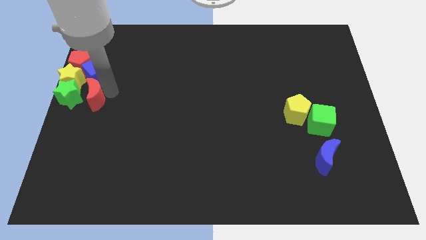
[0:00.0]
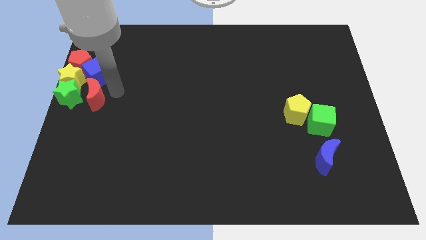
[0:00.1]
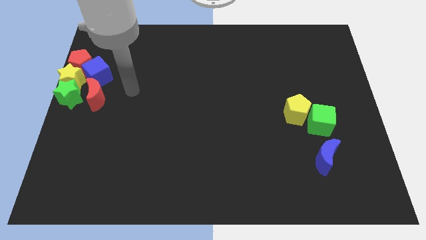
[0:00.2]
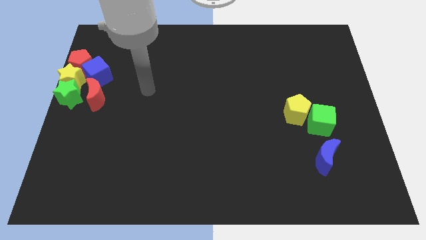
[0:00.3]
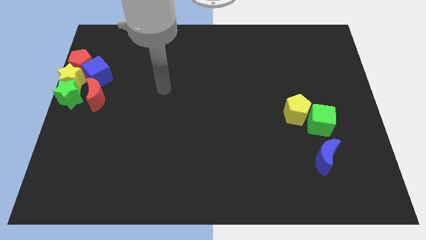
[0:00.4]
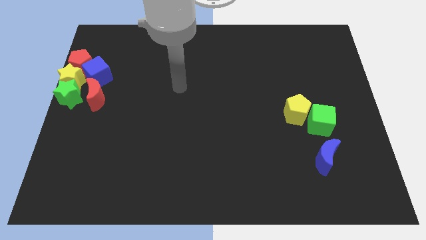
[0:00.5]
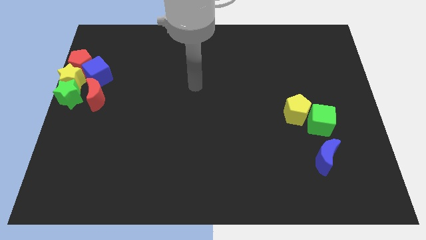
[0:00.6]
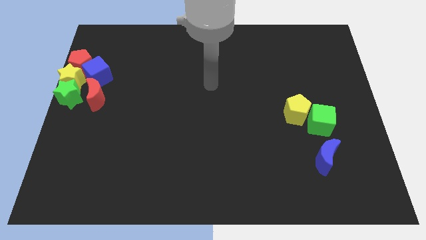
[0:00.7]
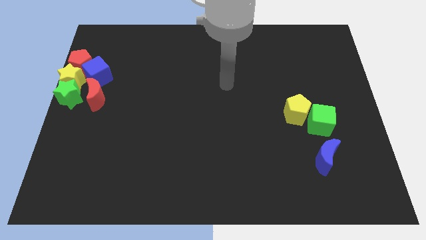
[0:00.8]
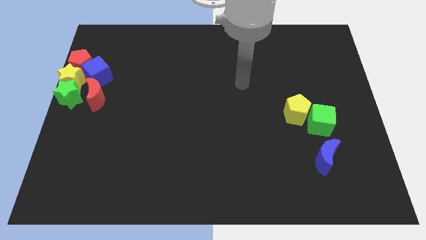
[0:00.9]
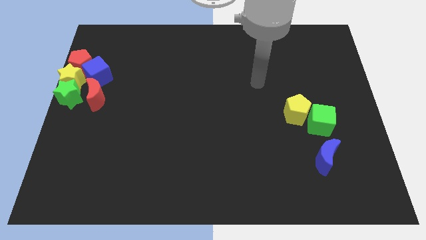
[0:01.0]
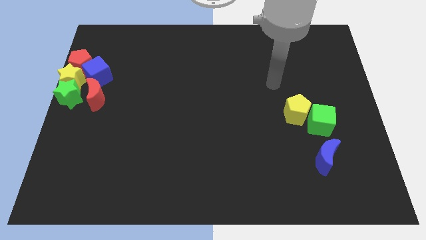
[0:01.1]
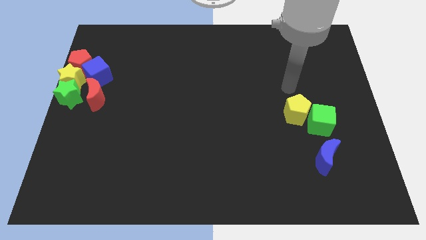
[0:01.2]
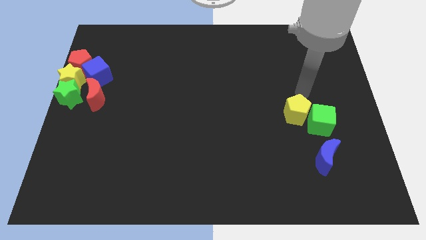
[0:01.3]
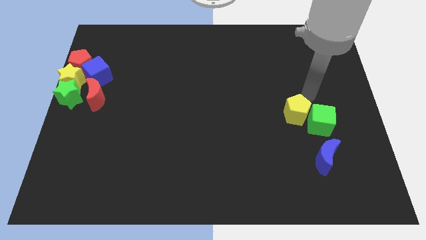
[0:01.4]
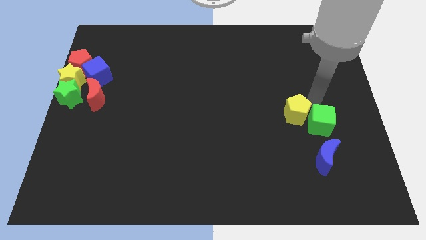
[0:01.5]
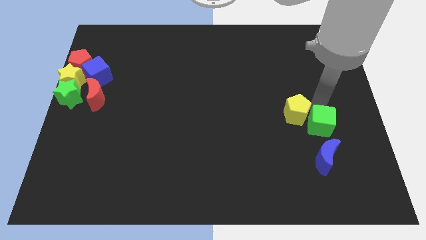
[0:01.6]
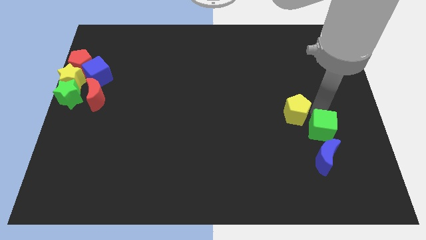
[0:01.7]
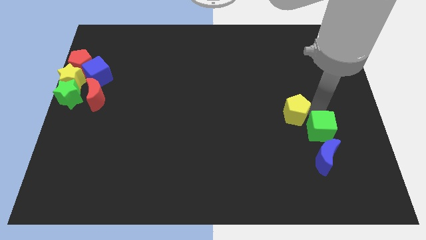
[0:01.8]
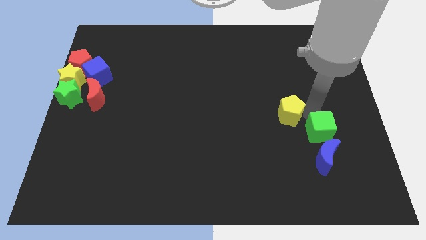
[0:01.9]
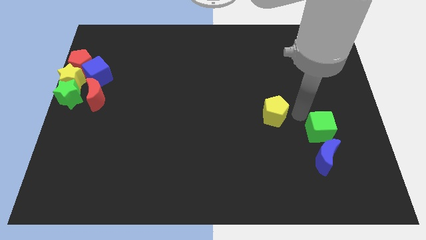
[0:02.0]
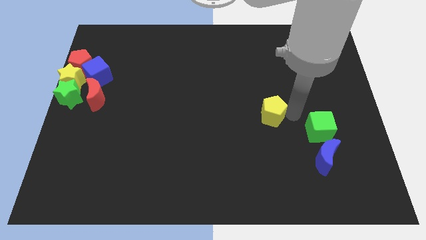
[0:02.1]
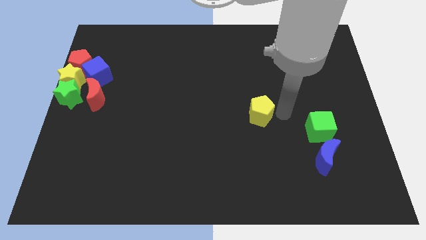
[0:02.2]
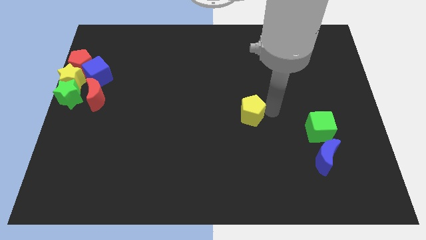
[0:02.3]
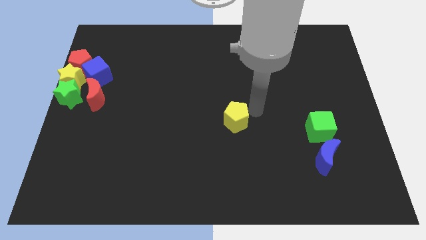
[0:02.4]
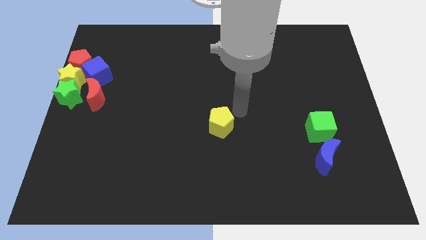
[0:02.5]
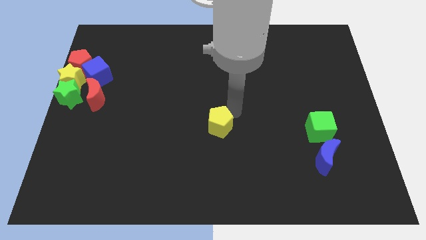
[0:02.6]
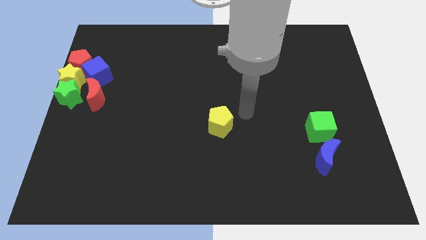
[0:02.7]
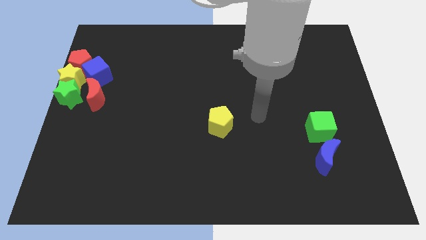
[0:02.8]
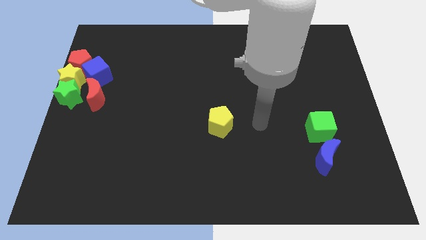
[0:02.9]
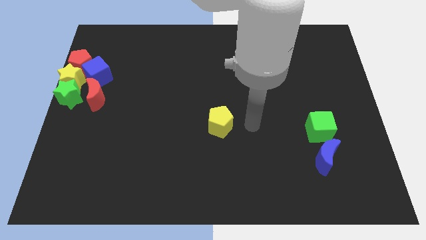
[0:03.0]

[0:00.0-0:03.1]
push the yellow pentagon to the center of the board

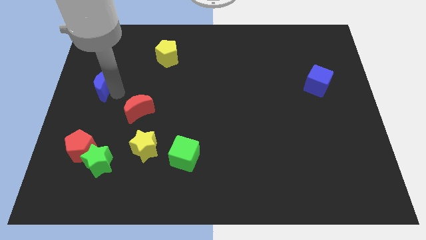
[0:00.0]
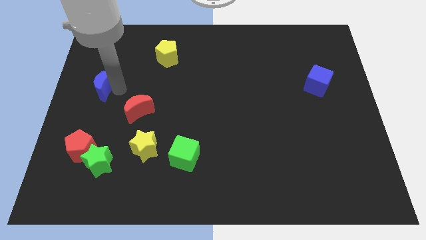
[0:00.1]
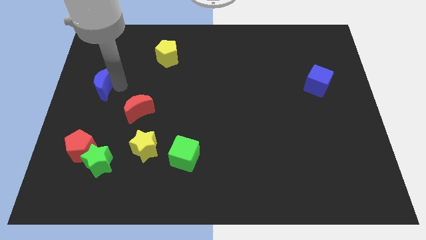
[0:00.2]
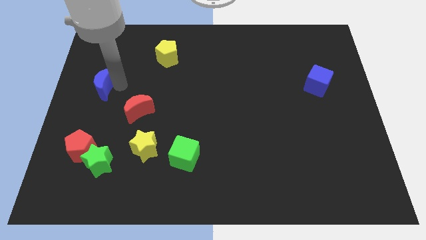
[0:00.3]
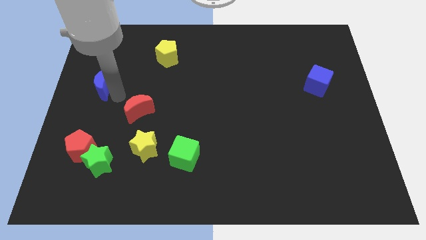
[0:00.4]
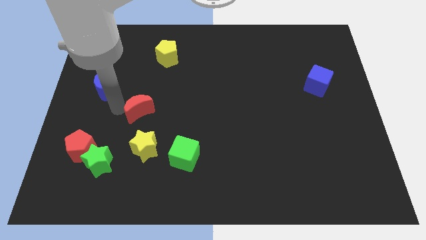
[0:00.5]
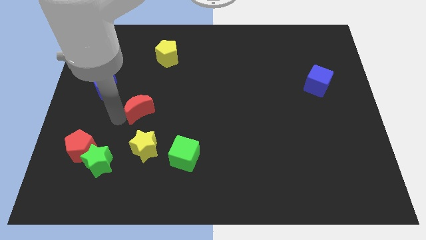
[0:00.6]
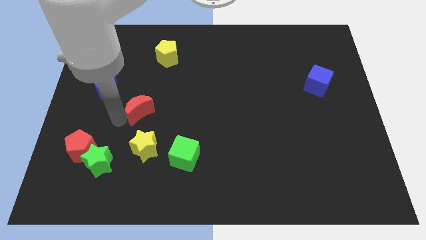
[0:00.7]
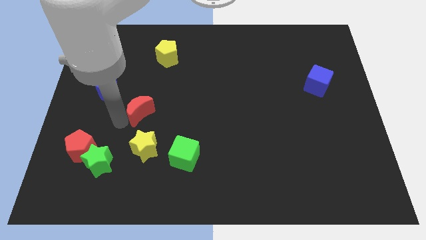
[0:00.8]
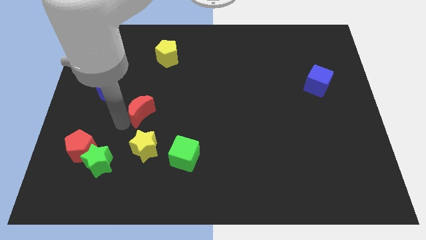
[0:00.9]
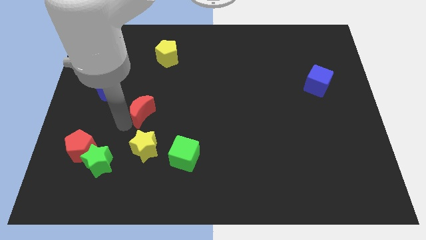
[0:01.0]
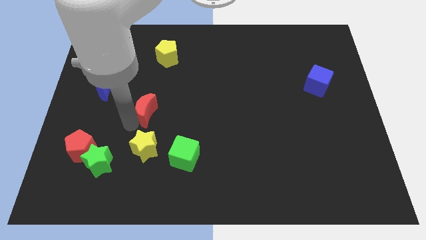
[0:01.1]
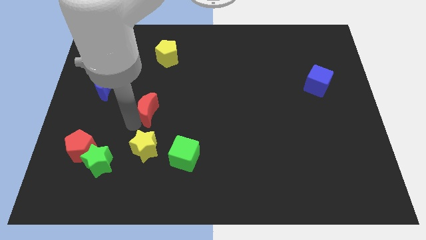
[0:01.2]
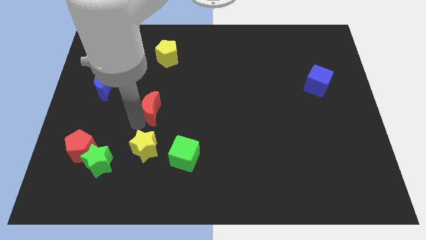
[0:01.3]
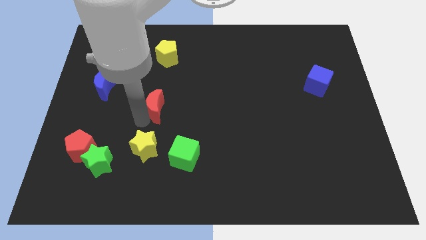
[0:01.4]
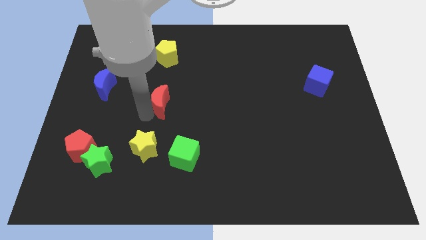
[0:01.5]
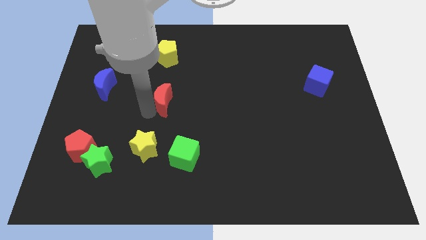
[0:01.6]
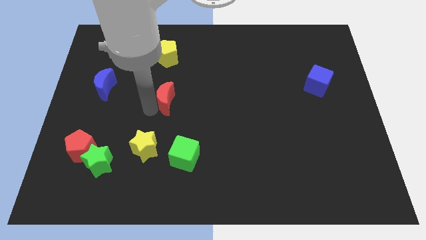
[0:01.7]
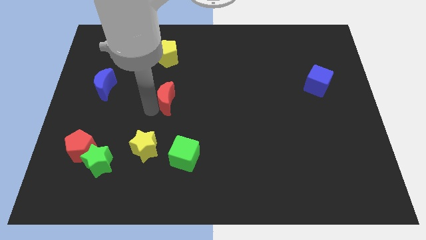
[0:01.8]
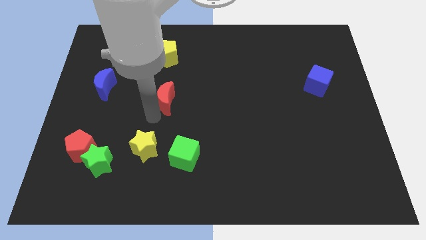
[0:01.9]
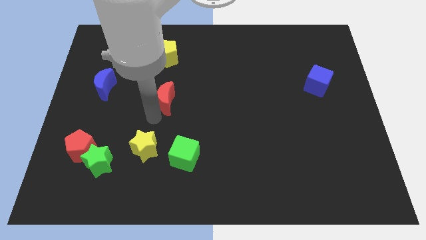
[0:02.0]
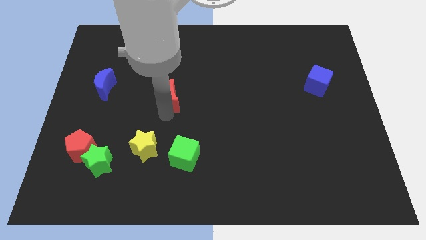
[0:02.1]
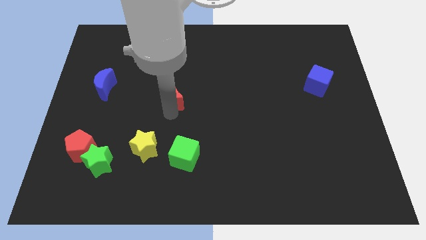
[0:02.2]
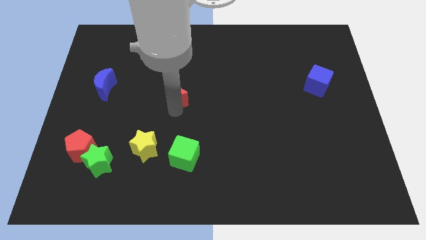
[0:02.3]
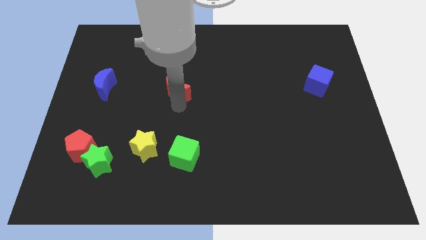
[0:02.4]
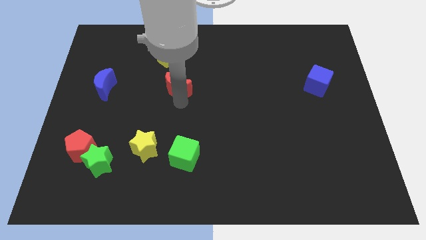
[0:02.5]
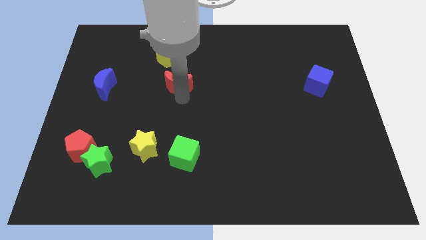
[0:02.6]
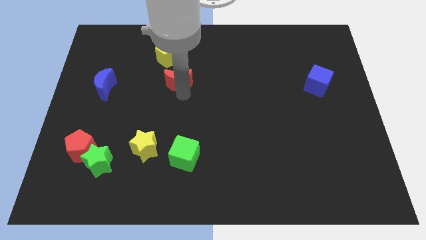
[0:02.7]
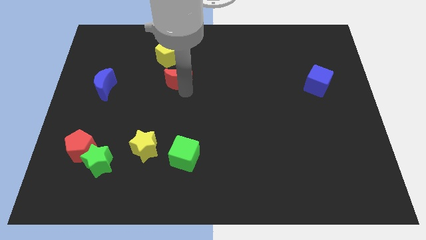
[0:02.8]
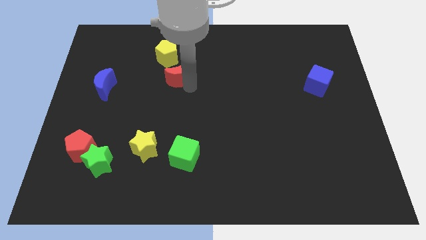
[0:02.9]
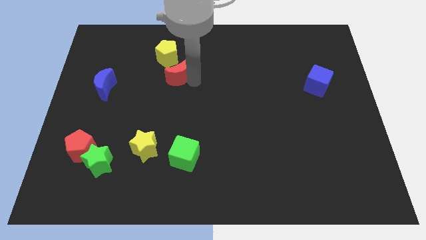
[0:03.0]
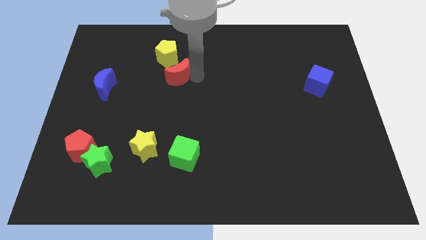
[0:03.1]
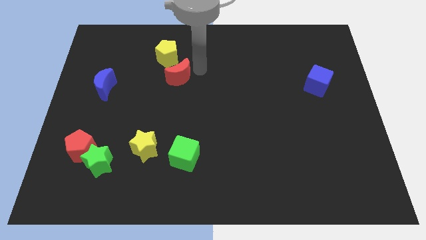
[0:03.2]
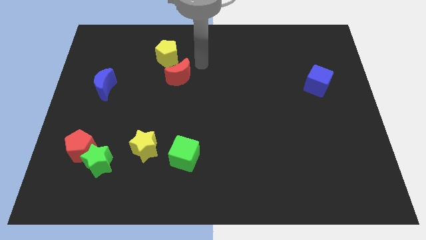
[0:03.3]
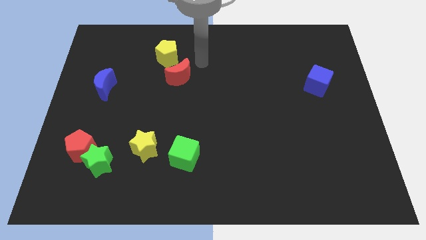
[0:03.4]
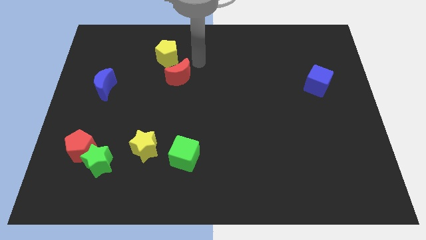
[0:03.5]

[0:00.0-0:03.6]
place red moon to the bottom of the yellow pentagon

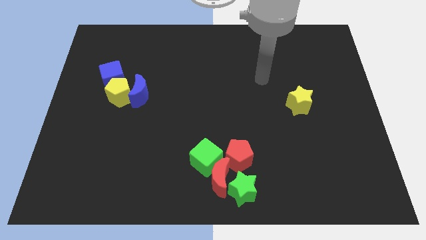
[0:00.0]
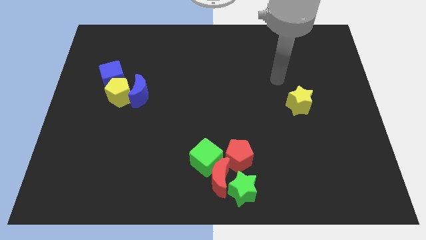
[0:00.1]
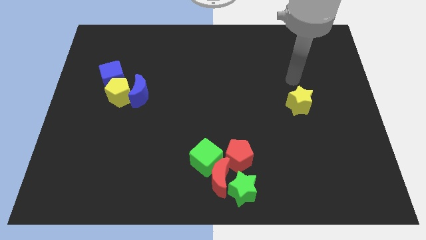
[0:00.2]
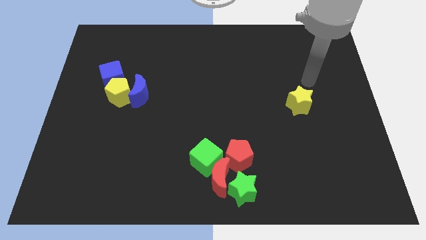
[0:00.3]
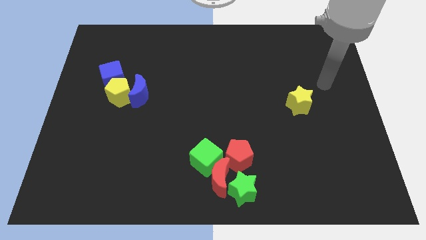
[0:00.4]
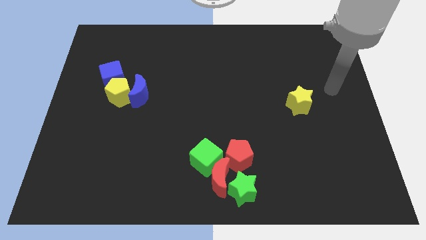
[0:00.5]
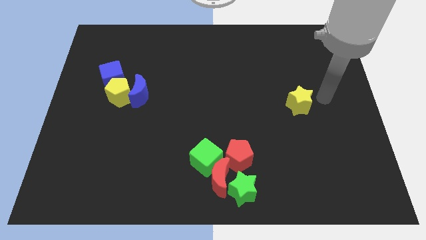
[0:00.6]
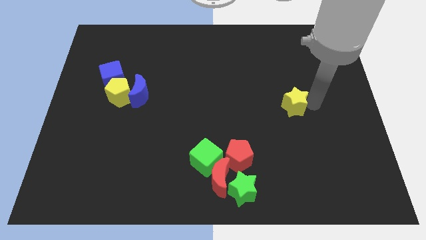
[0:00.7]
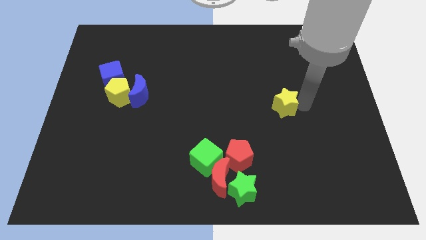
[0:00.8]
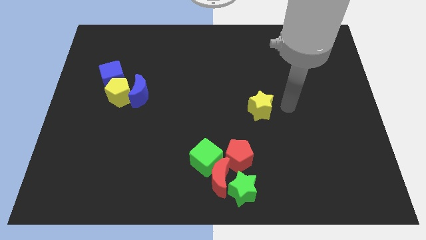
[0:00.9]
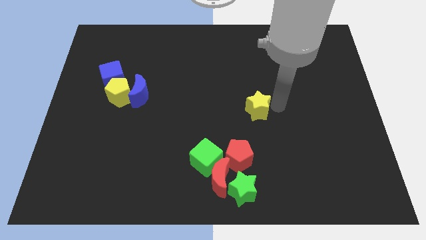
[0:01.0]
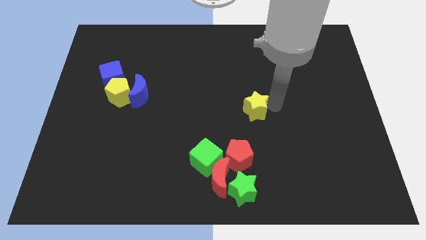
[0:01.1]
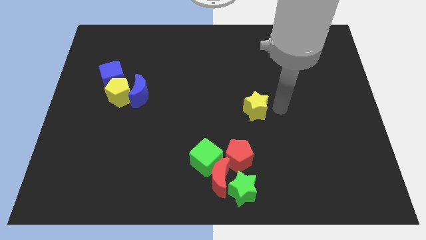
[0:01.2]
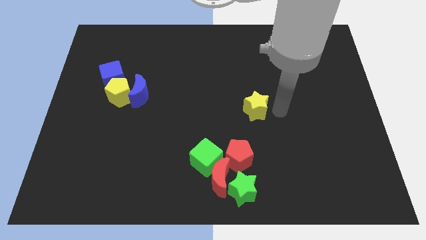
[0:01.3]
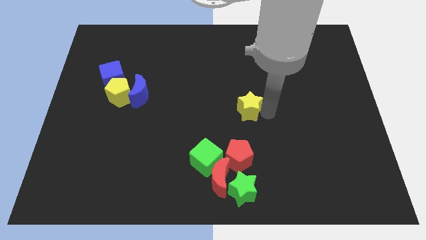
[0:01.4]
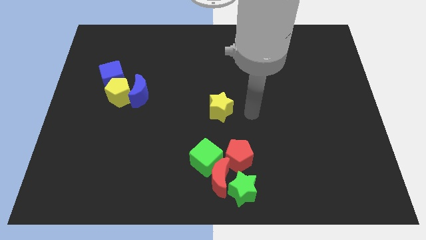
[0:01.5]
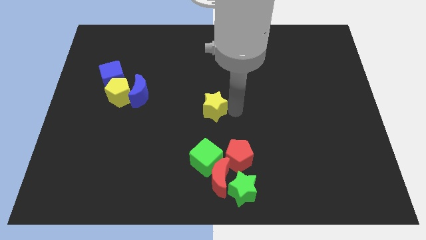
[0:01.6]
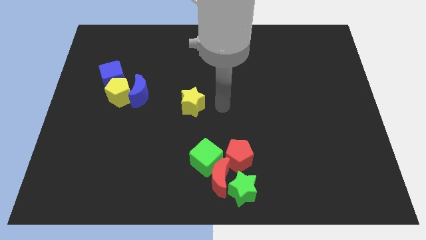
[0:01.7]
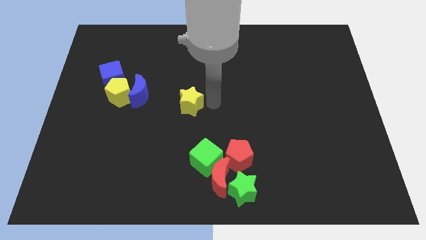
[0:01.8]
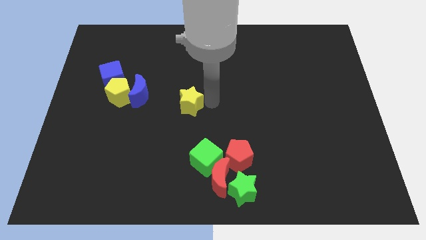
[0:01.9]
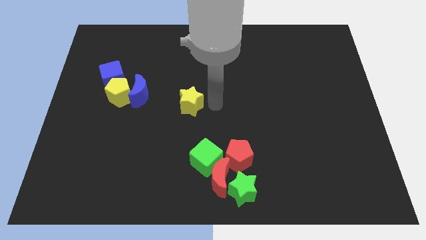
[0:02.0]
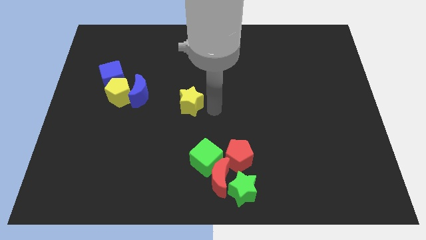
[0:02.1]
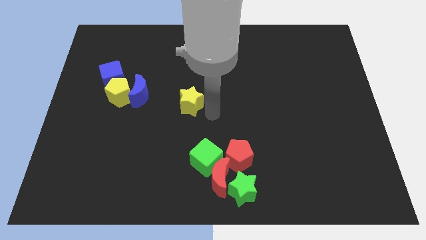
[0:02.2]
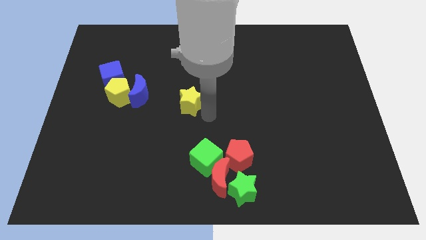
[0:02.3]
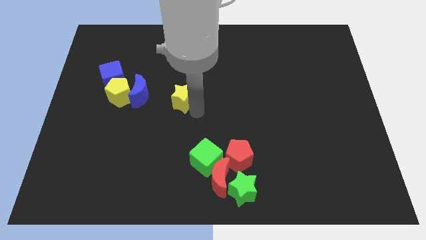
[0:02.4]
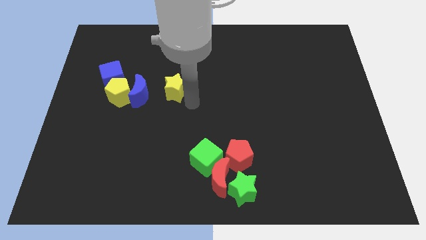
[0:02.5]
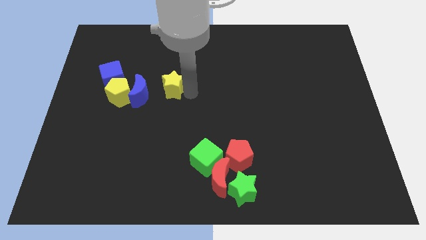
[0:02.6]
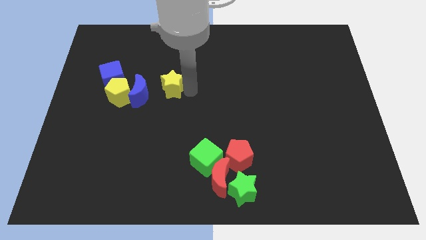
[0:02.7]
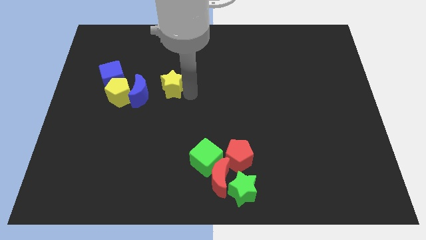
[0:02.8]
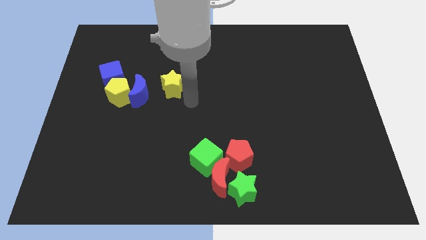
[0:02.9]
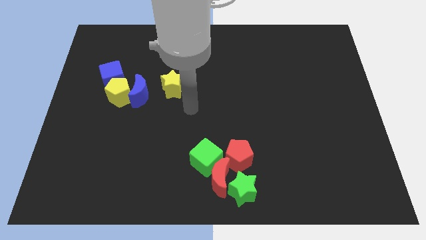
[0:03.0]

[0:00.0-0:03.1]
push the yellow star right to the blue moon
